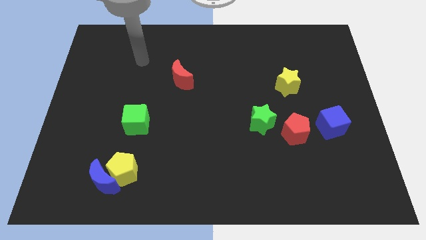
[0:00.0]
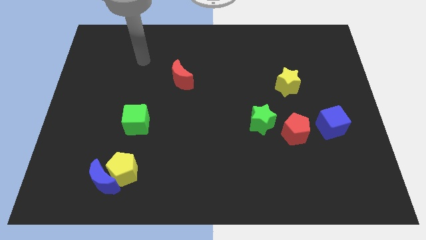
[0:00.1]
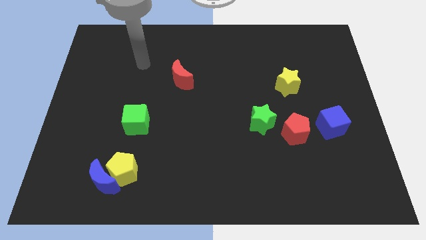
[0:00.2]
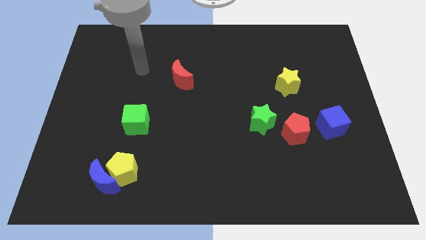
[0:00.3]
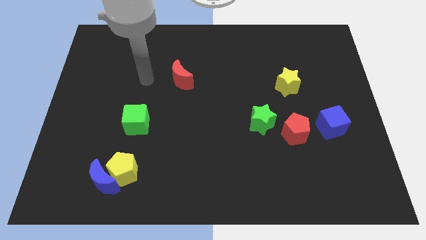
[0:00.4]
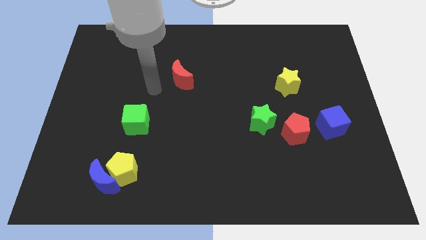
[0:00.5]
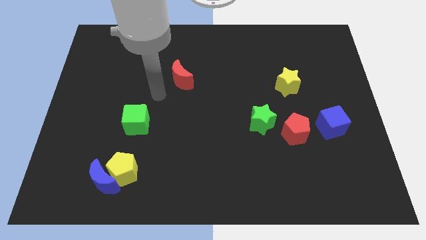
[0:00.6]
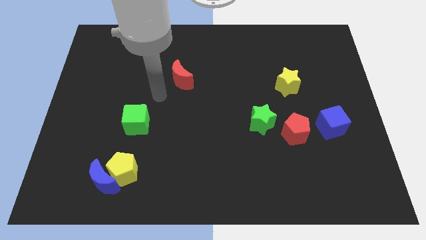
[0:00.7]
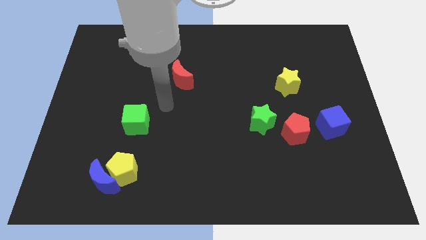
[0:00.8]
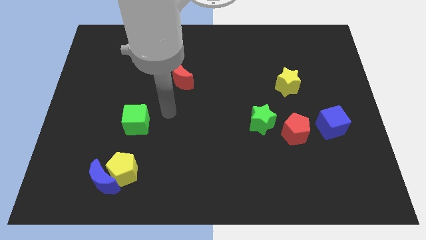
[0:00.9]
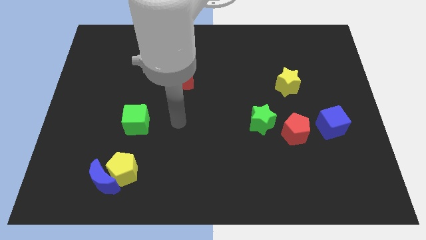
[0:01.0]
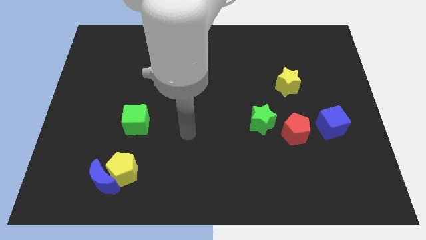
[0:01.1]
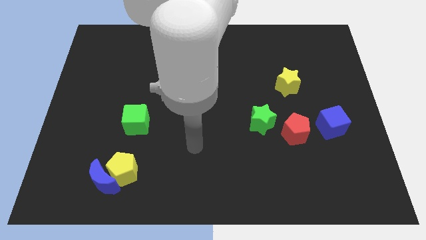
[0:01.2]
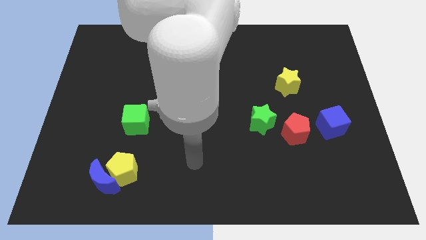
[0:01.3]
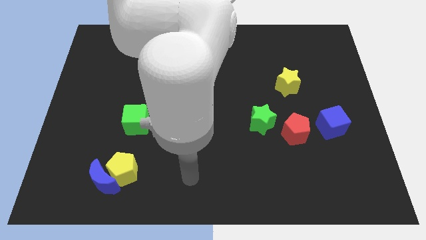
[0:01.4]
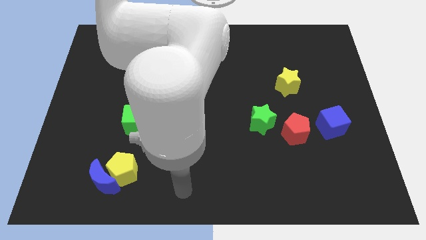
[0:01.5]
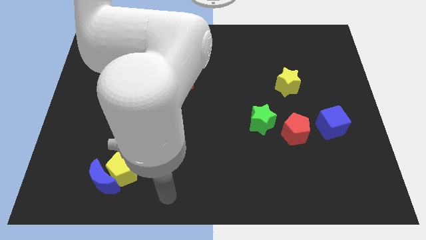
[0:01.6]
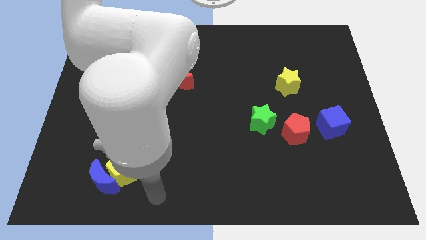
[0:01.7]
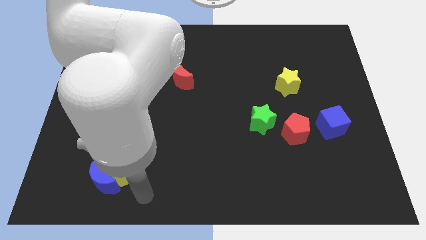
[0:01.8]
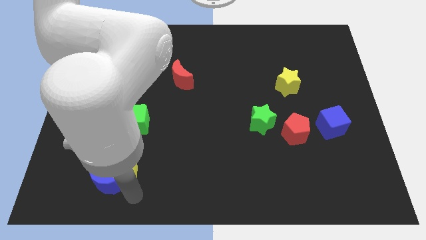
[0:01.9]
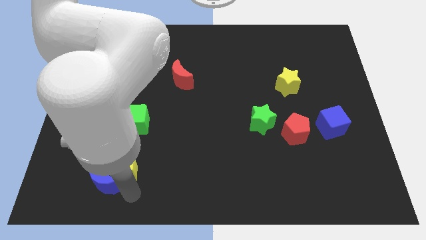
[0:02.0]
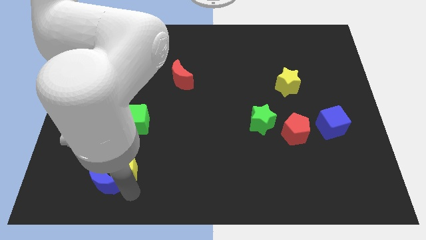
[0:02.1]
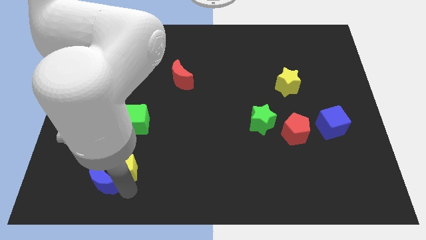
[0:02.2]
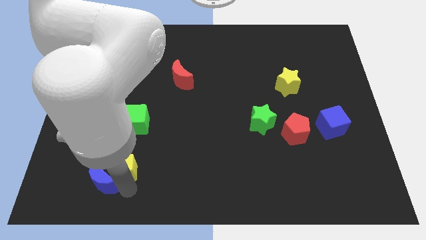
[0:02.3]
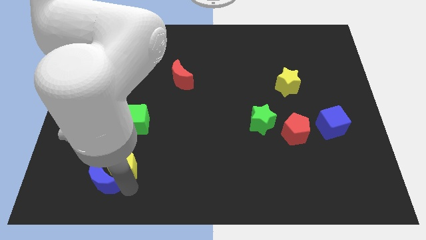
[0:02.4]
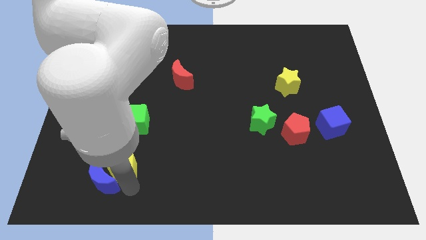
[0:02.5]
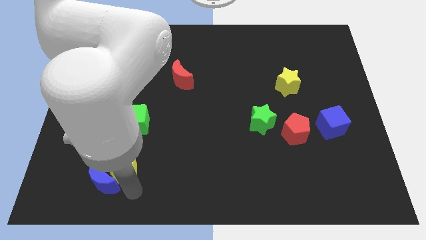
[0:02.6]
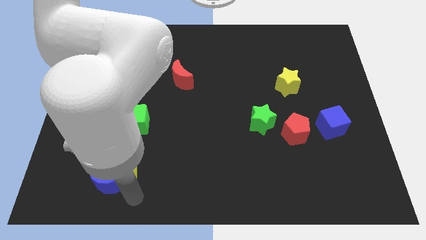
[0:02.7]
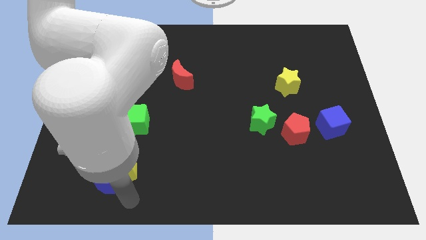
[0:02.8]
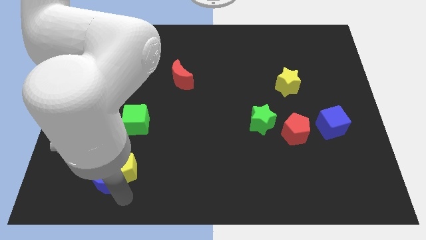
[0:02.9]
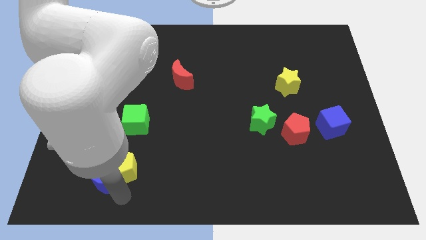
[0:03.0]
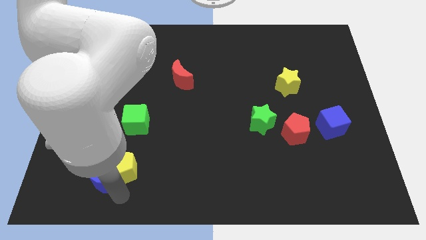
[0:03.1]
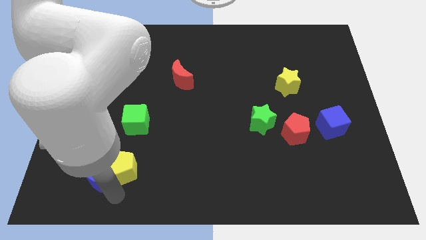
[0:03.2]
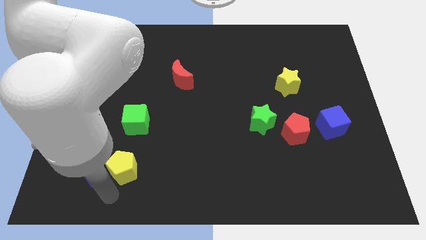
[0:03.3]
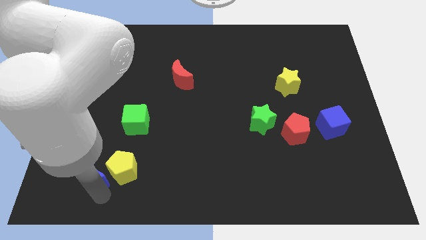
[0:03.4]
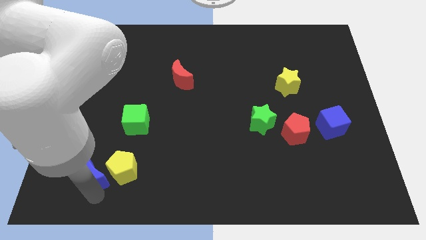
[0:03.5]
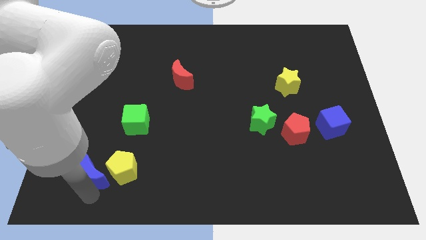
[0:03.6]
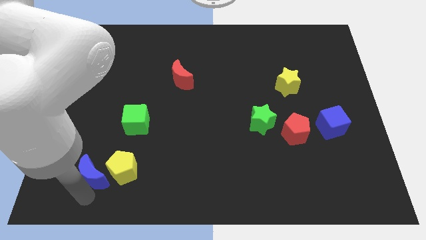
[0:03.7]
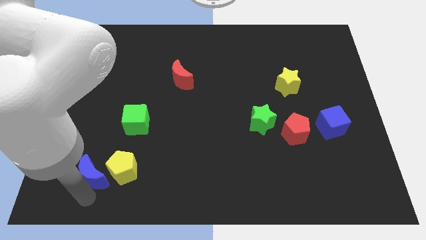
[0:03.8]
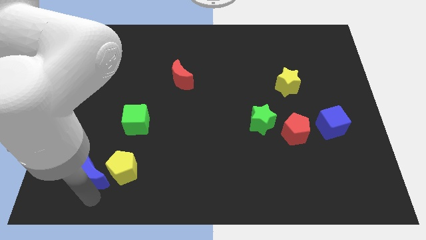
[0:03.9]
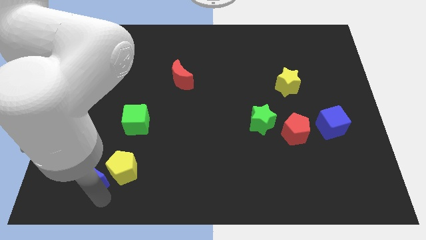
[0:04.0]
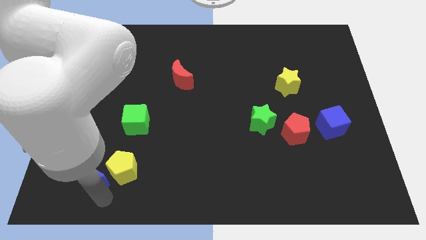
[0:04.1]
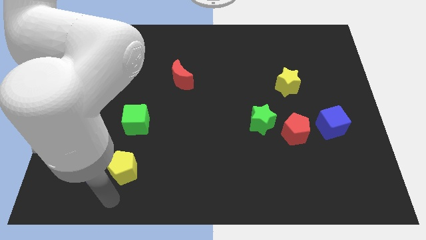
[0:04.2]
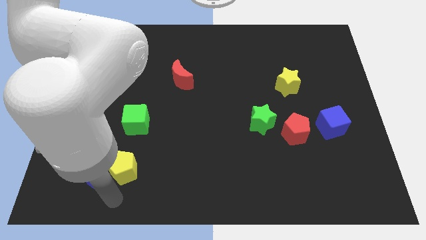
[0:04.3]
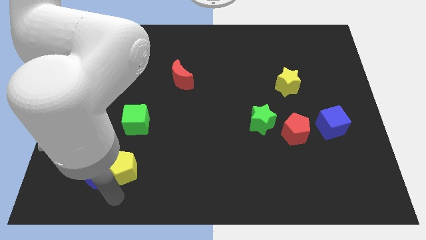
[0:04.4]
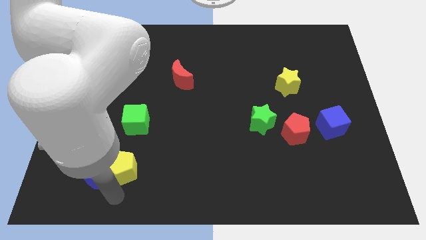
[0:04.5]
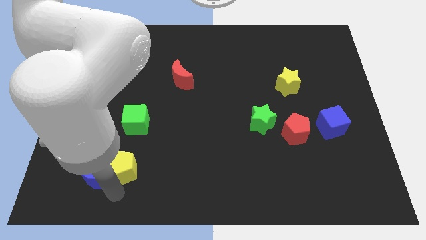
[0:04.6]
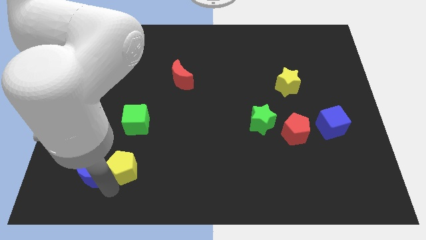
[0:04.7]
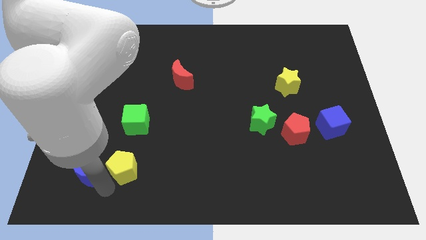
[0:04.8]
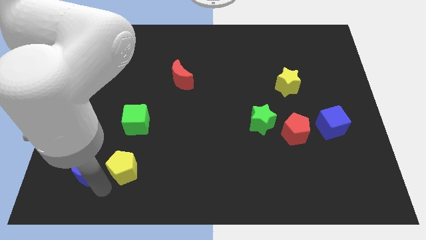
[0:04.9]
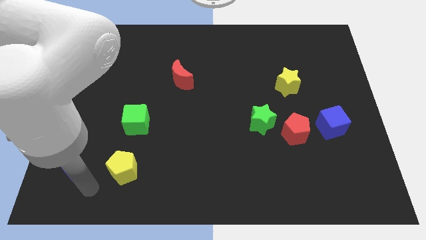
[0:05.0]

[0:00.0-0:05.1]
separate the blue moon from the yellow pentagon

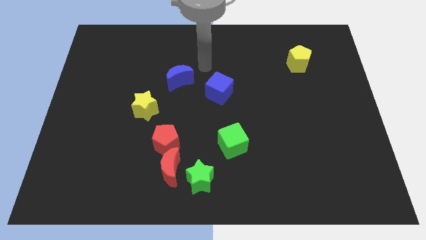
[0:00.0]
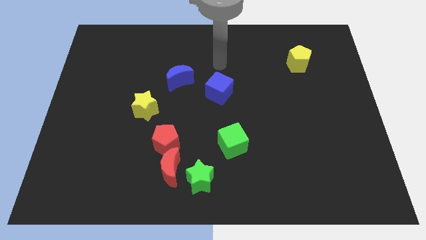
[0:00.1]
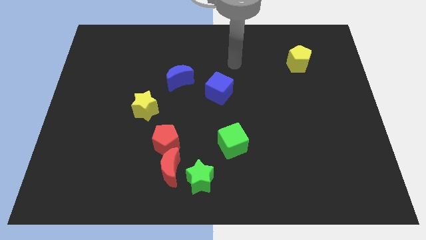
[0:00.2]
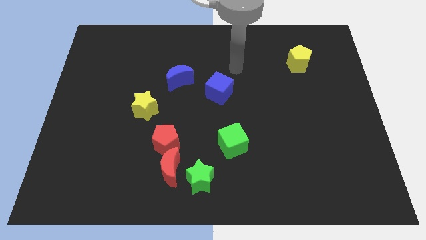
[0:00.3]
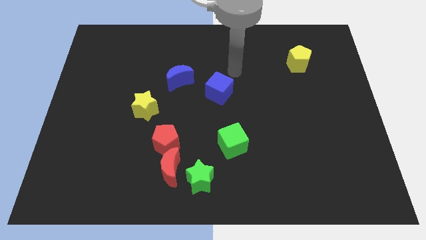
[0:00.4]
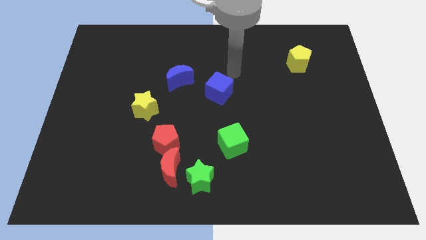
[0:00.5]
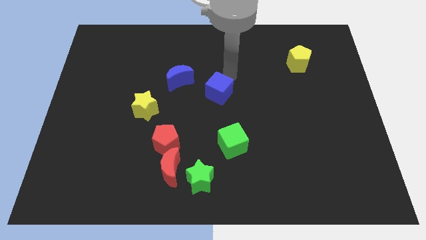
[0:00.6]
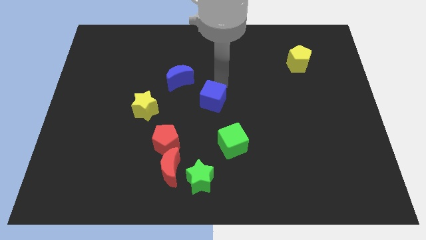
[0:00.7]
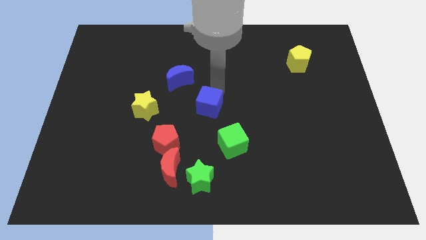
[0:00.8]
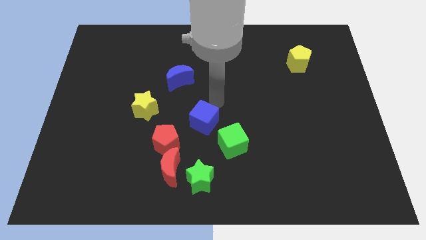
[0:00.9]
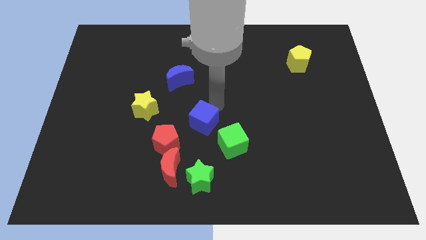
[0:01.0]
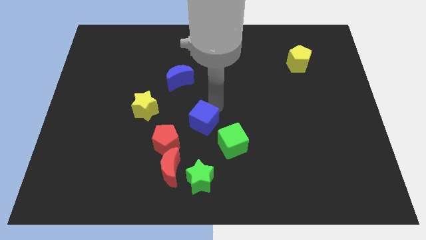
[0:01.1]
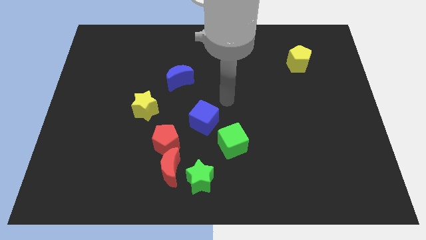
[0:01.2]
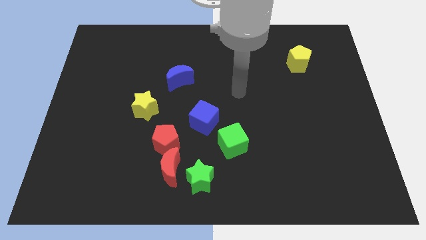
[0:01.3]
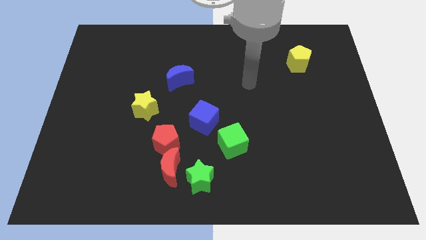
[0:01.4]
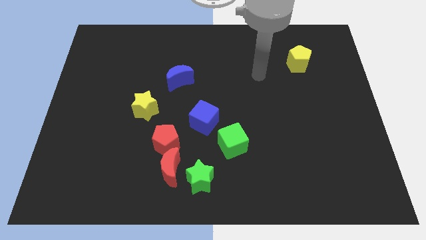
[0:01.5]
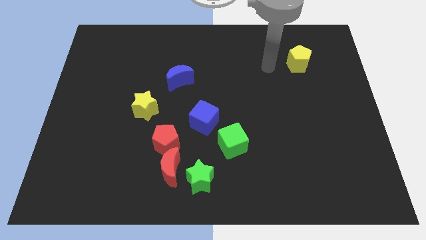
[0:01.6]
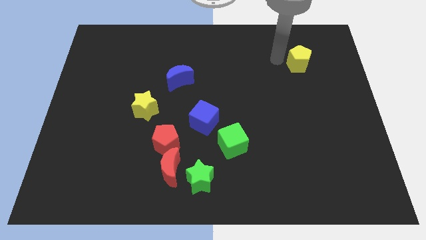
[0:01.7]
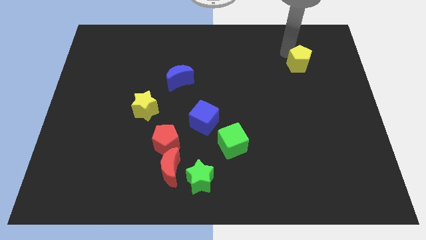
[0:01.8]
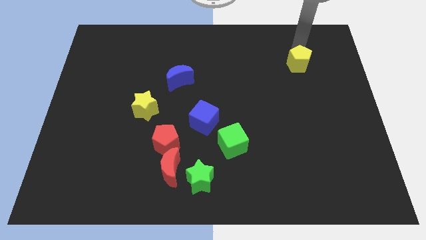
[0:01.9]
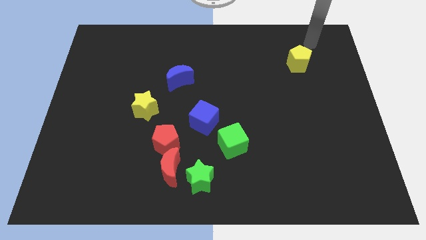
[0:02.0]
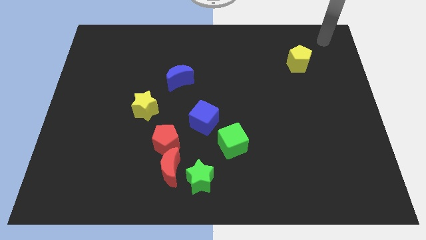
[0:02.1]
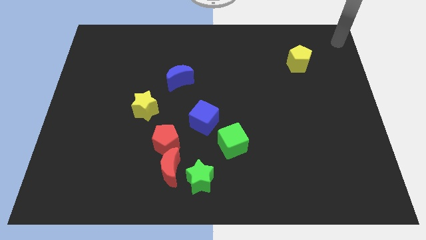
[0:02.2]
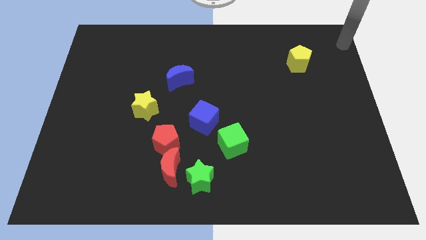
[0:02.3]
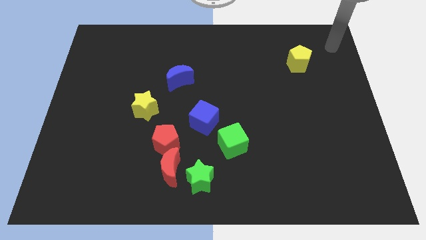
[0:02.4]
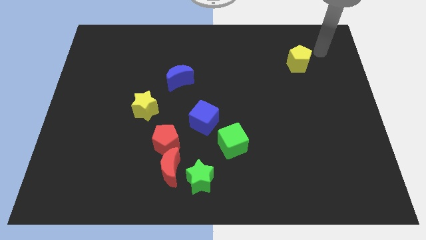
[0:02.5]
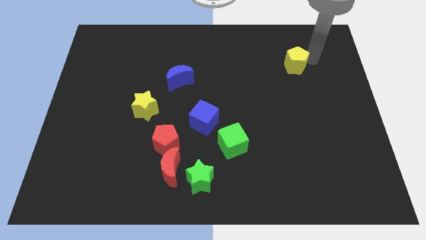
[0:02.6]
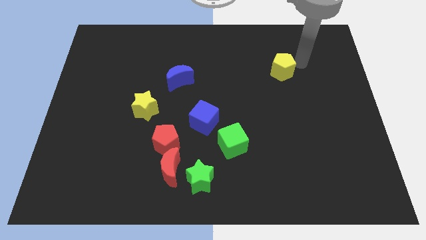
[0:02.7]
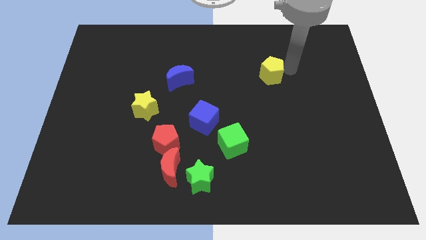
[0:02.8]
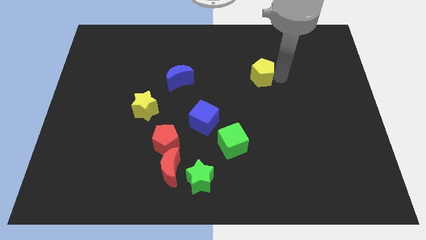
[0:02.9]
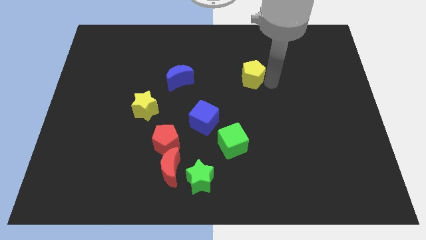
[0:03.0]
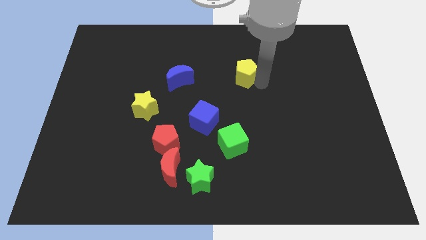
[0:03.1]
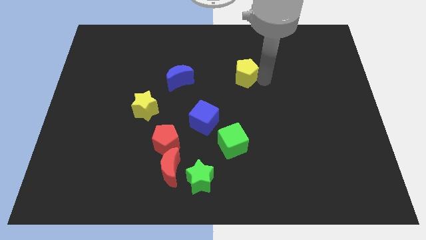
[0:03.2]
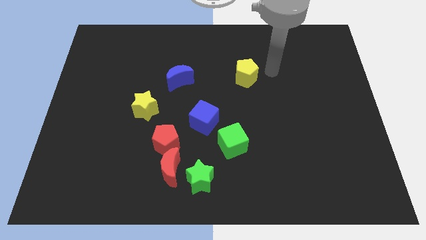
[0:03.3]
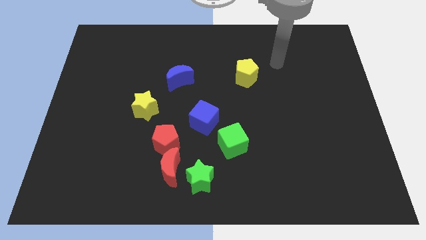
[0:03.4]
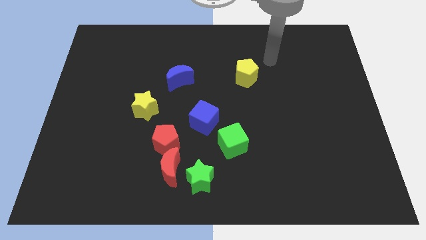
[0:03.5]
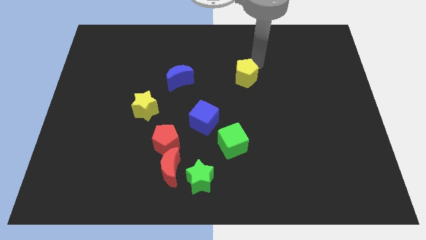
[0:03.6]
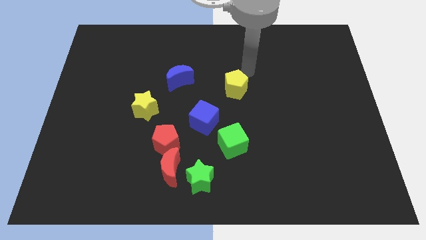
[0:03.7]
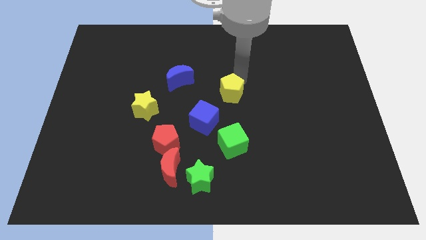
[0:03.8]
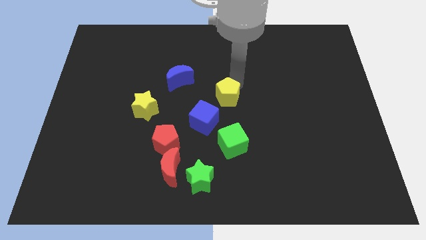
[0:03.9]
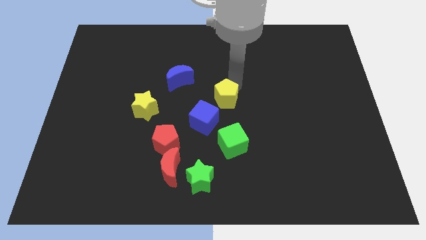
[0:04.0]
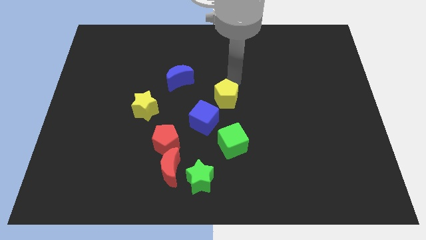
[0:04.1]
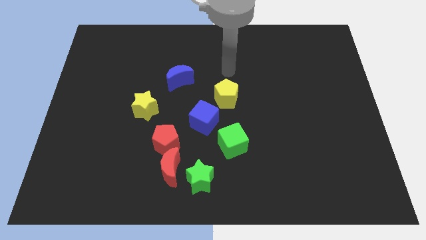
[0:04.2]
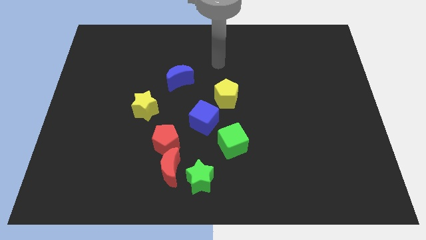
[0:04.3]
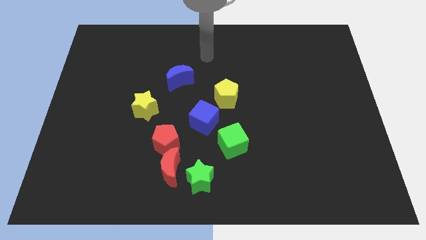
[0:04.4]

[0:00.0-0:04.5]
move the blue cube and yellow pentagon diagonal to each other
